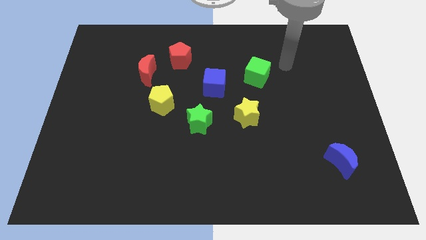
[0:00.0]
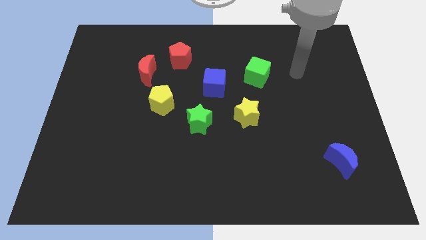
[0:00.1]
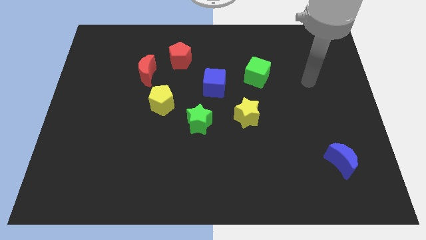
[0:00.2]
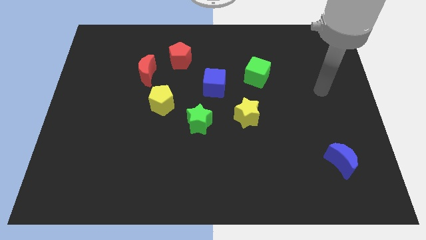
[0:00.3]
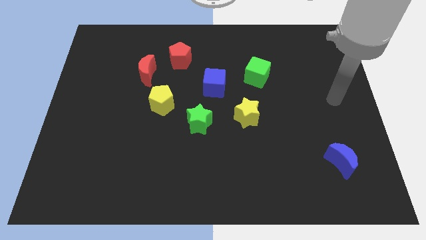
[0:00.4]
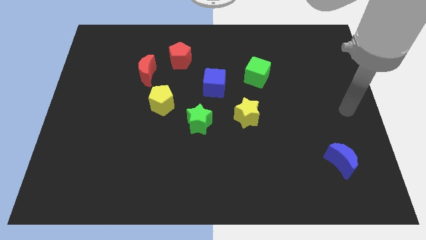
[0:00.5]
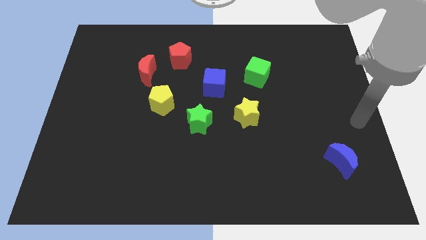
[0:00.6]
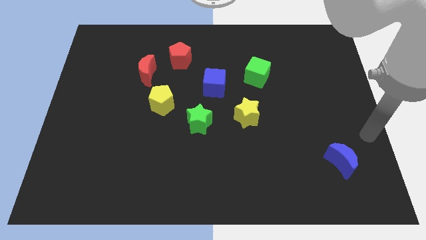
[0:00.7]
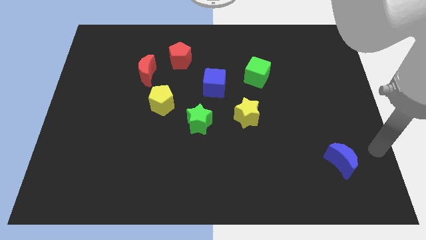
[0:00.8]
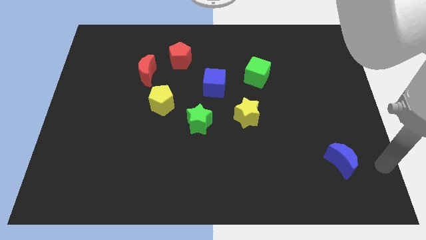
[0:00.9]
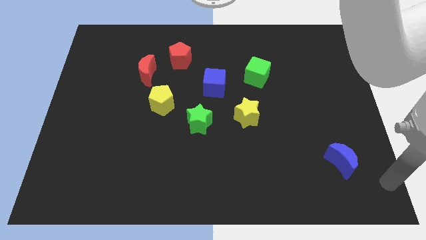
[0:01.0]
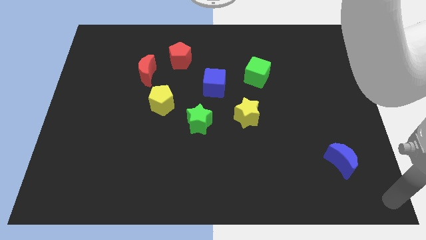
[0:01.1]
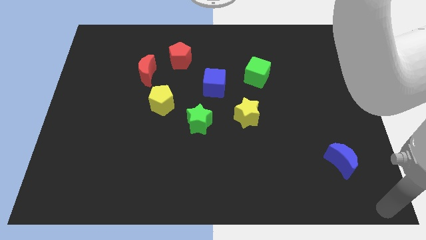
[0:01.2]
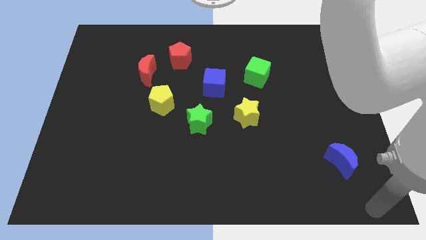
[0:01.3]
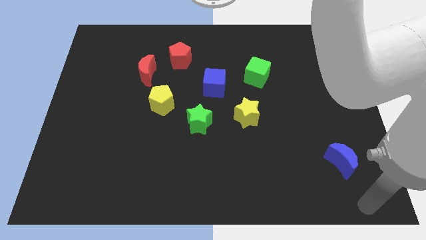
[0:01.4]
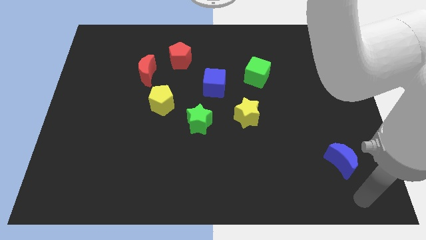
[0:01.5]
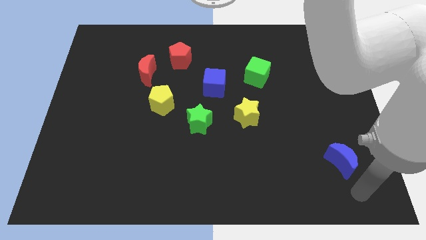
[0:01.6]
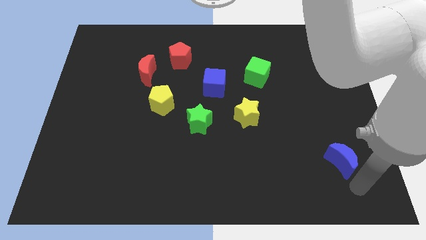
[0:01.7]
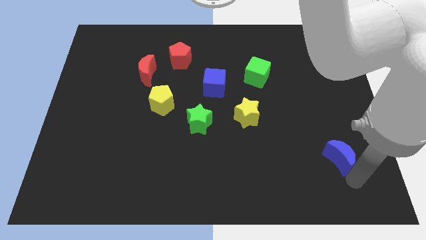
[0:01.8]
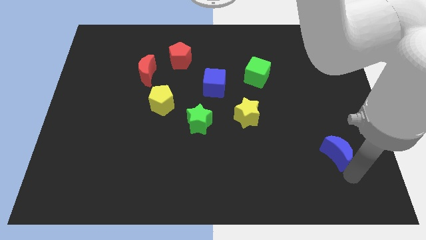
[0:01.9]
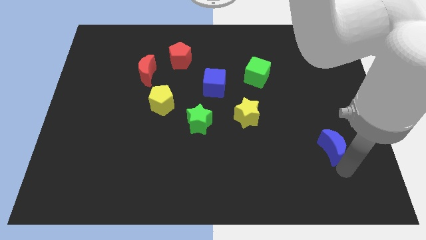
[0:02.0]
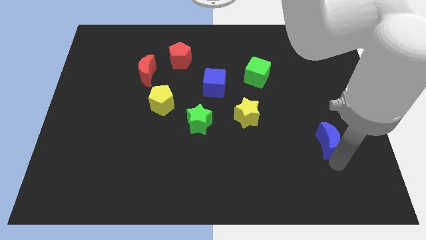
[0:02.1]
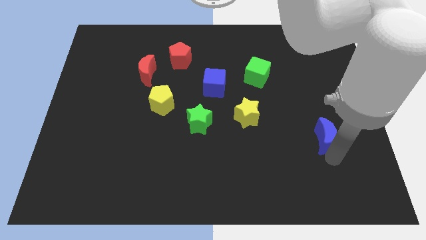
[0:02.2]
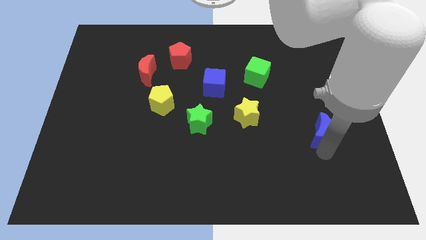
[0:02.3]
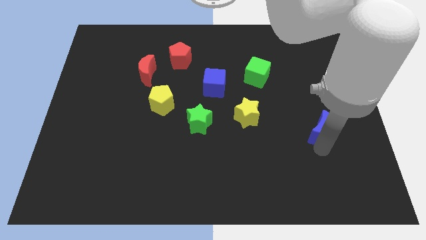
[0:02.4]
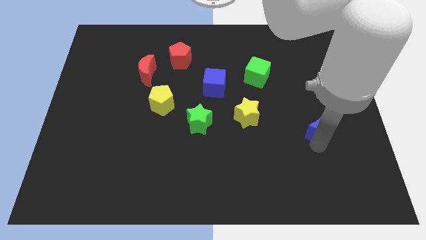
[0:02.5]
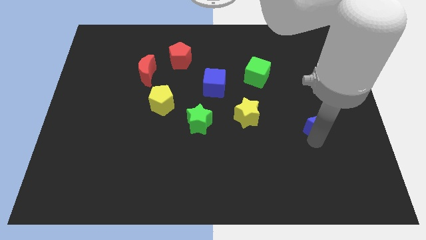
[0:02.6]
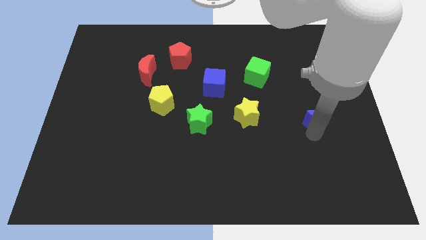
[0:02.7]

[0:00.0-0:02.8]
push the blue crescent to the right of the yellow star

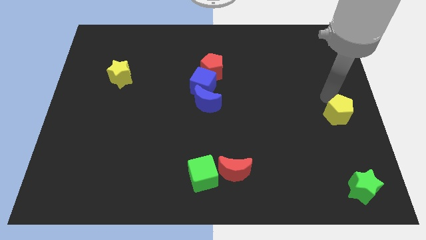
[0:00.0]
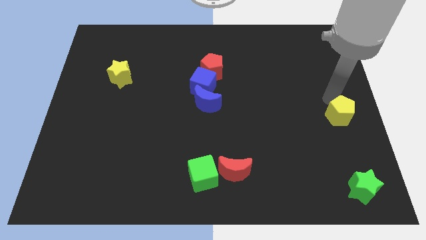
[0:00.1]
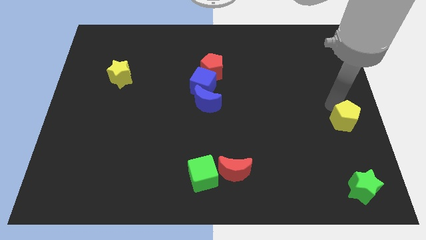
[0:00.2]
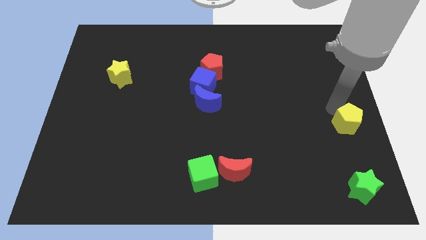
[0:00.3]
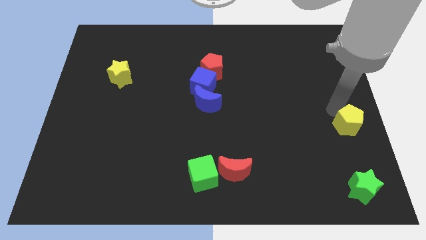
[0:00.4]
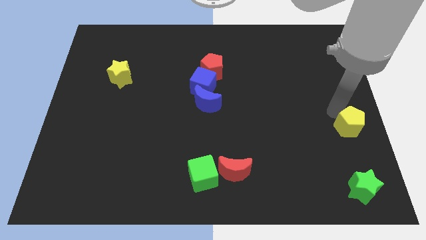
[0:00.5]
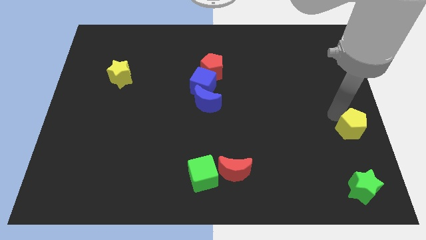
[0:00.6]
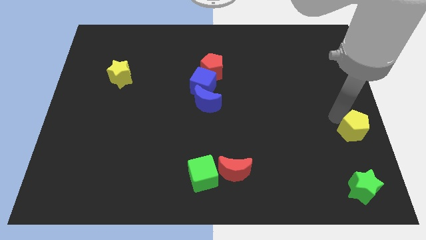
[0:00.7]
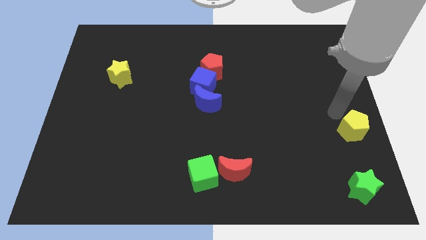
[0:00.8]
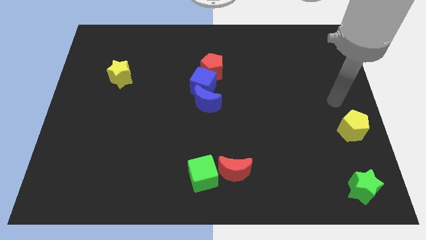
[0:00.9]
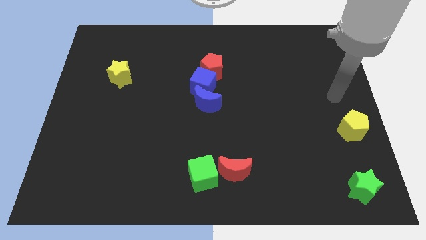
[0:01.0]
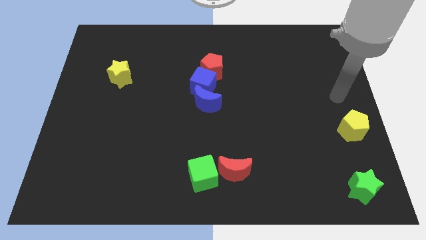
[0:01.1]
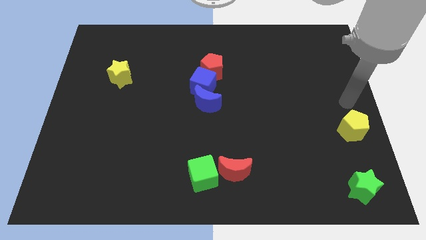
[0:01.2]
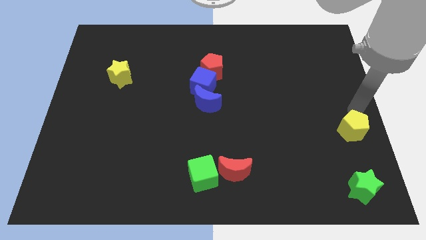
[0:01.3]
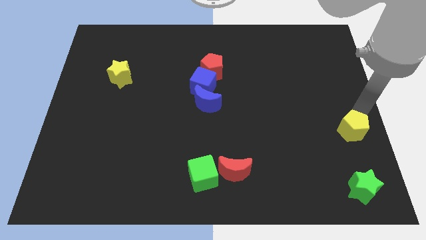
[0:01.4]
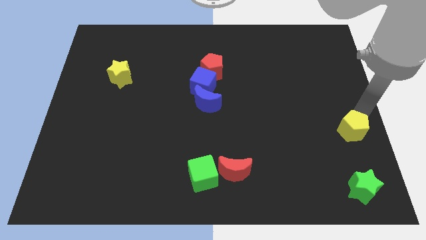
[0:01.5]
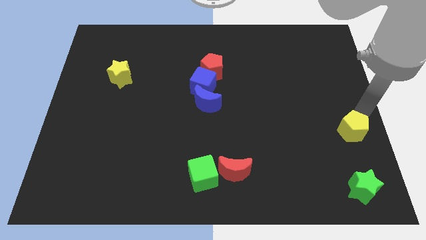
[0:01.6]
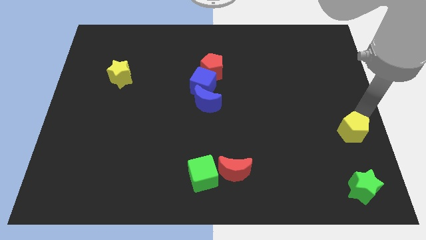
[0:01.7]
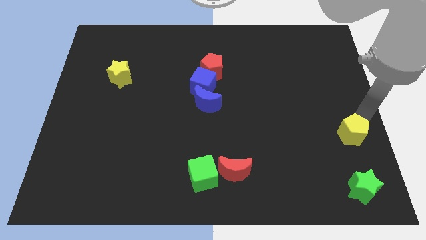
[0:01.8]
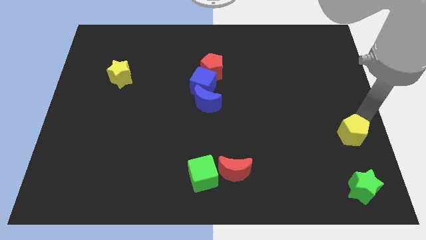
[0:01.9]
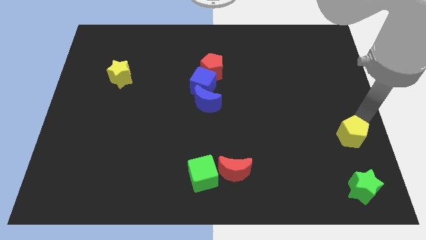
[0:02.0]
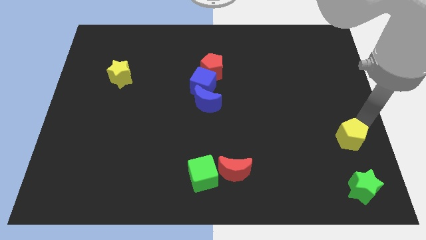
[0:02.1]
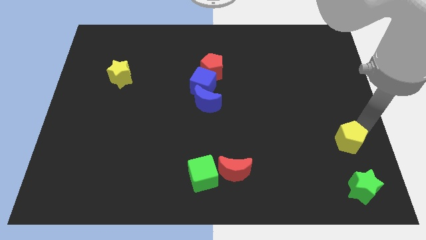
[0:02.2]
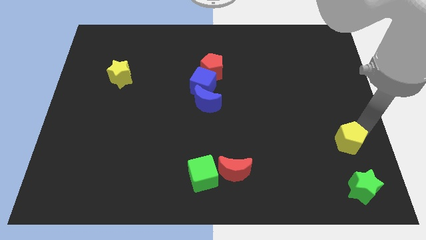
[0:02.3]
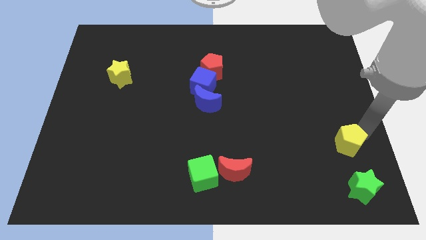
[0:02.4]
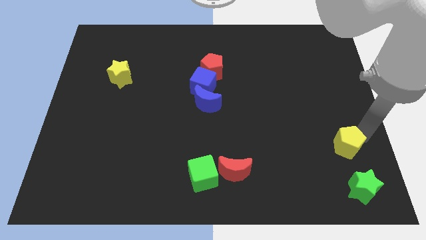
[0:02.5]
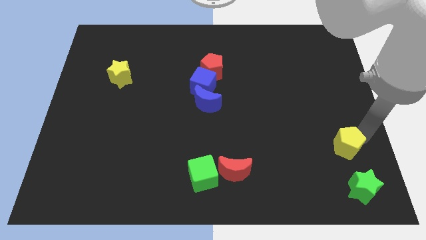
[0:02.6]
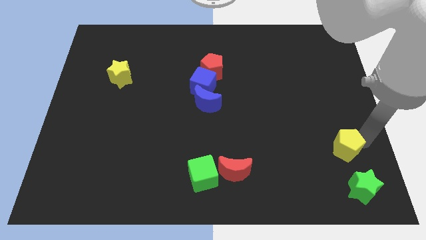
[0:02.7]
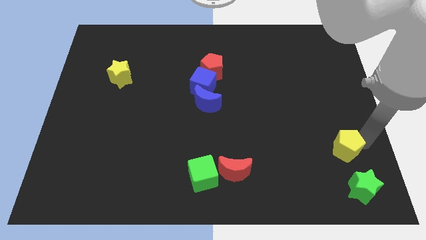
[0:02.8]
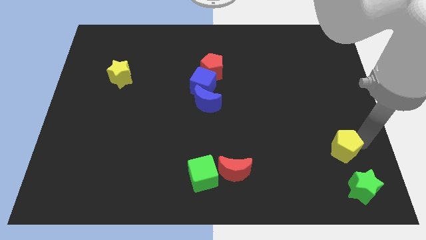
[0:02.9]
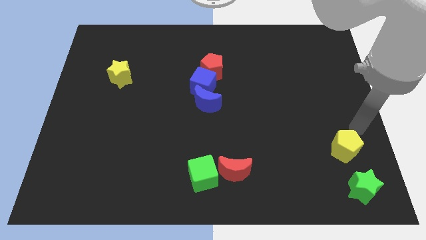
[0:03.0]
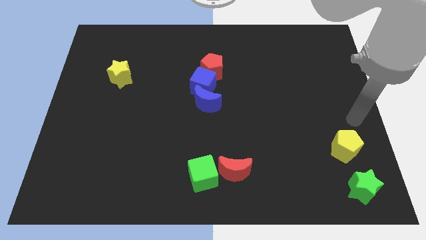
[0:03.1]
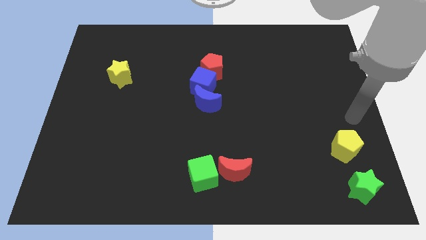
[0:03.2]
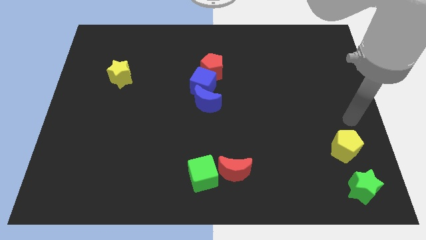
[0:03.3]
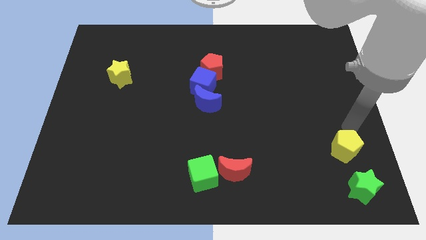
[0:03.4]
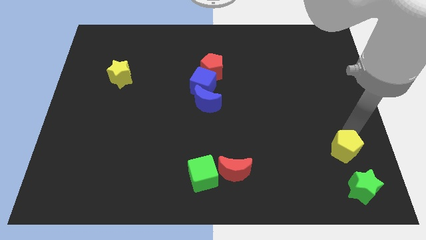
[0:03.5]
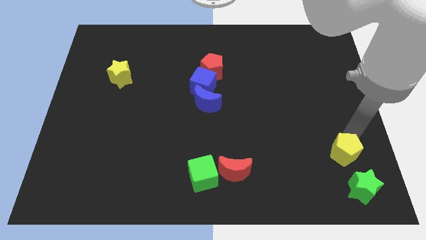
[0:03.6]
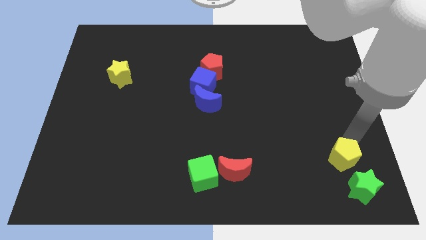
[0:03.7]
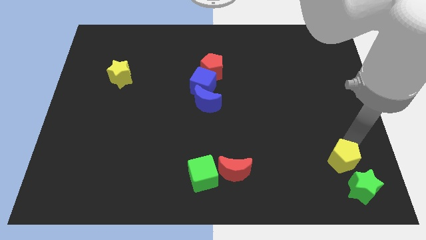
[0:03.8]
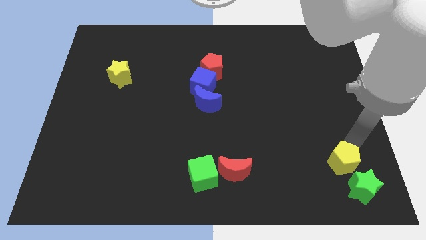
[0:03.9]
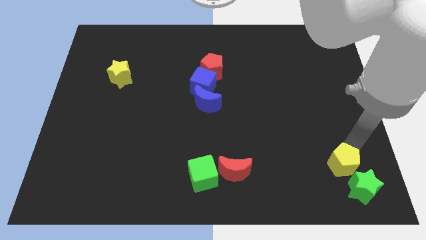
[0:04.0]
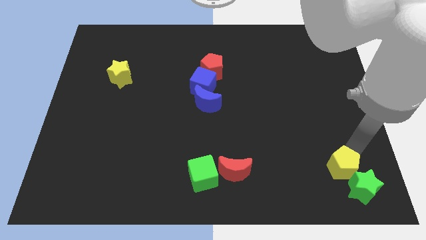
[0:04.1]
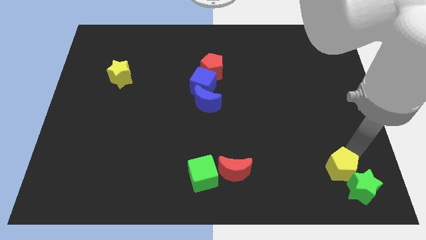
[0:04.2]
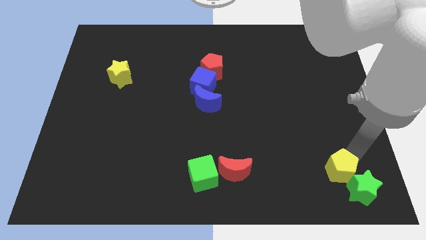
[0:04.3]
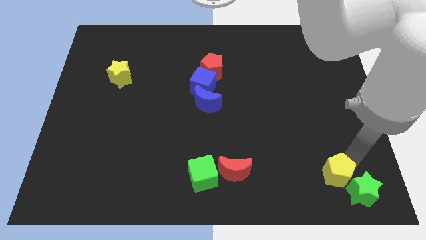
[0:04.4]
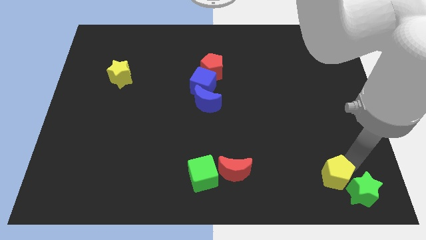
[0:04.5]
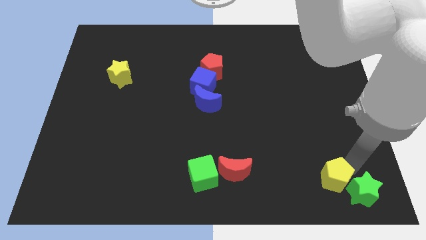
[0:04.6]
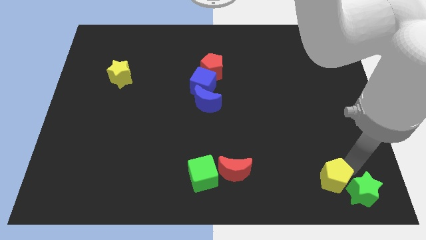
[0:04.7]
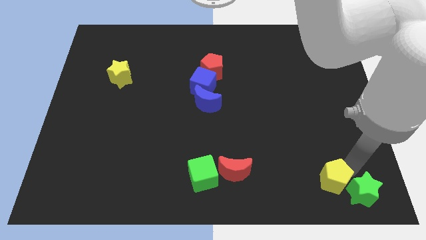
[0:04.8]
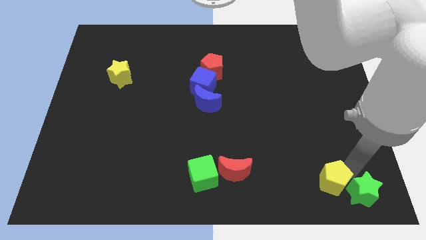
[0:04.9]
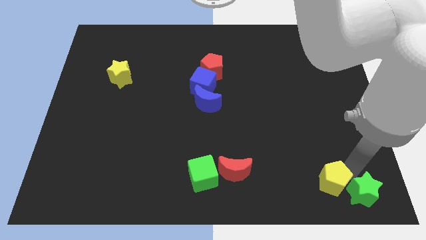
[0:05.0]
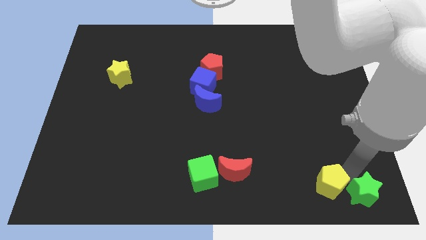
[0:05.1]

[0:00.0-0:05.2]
place yellow pentagon beside green star

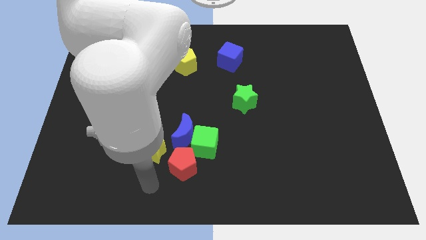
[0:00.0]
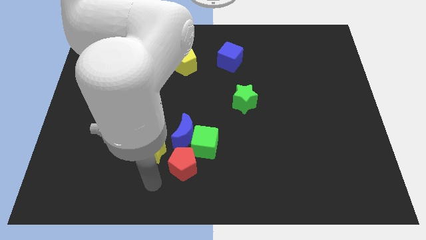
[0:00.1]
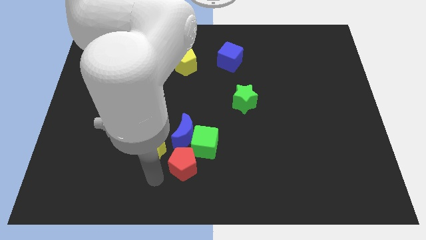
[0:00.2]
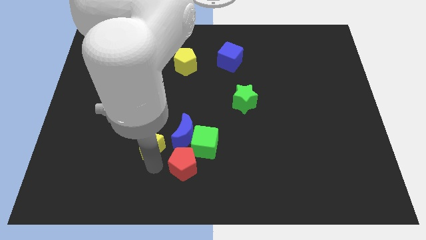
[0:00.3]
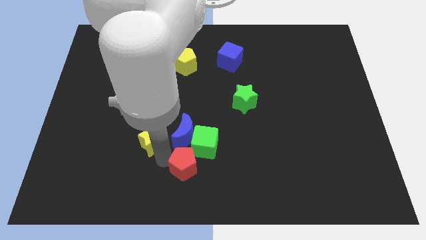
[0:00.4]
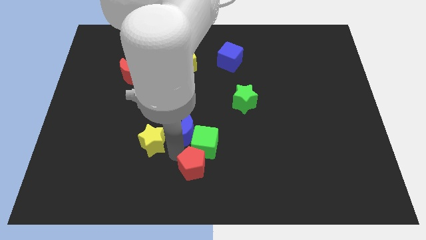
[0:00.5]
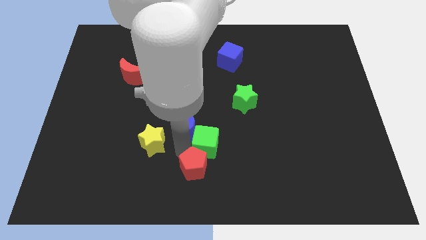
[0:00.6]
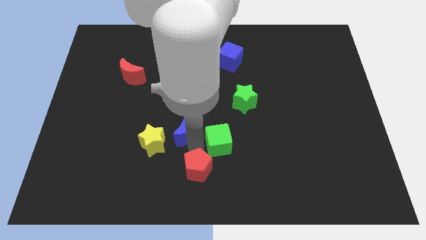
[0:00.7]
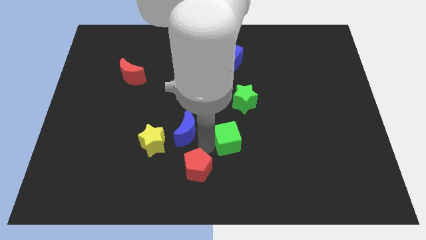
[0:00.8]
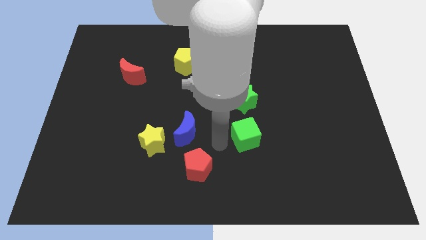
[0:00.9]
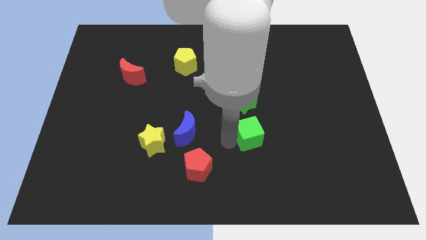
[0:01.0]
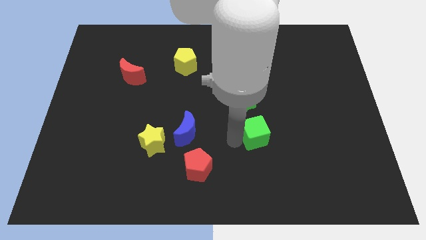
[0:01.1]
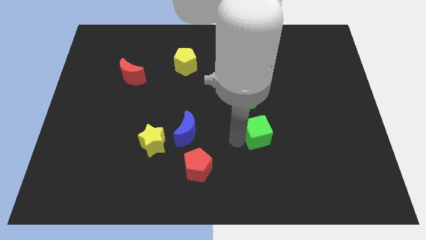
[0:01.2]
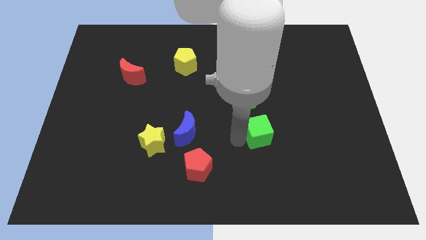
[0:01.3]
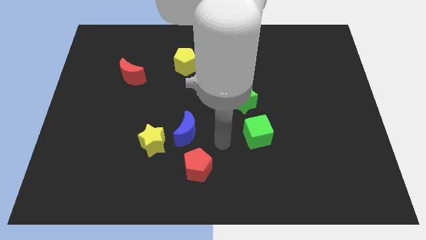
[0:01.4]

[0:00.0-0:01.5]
push the green cube to the right side of the blue moon
